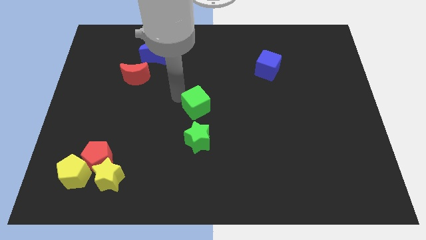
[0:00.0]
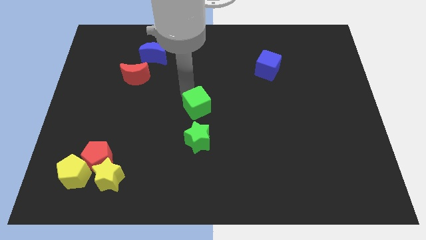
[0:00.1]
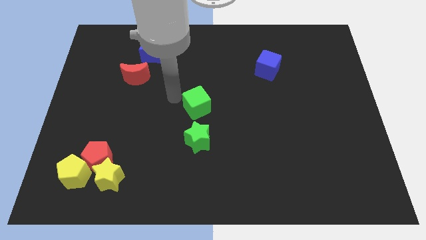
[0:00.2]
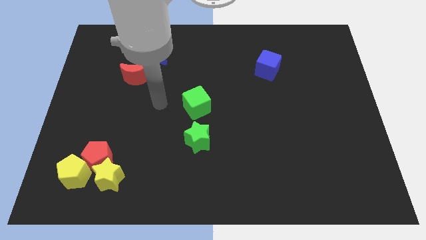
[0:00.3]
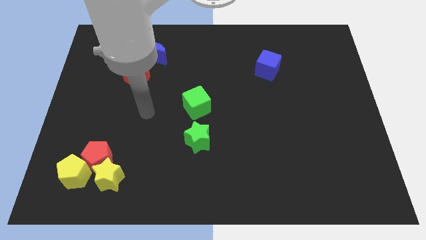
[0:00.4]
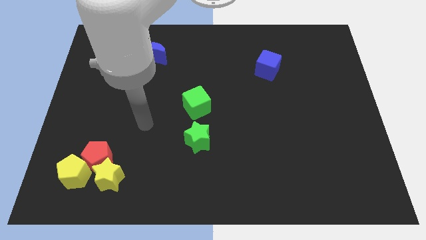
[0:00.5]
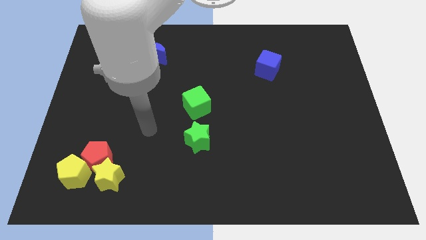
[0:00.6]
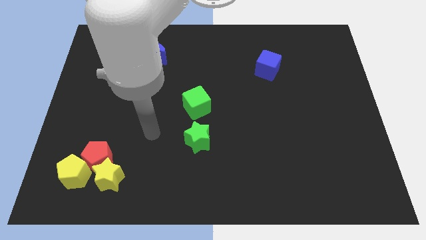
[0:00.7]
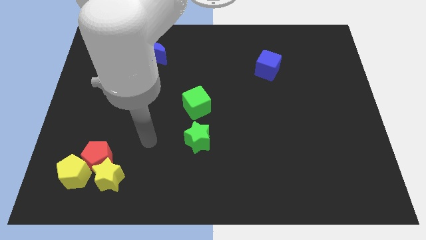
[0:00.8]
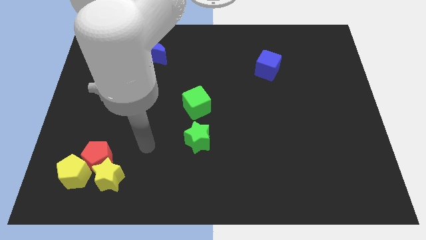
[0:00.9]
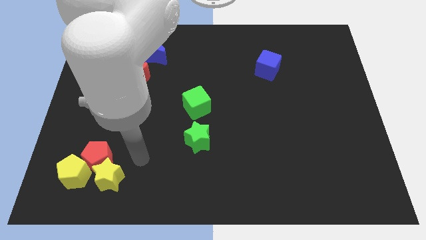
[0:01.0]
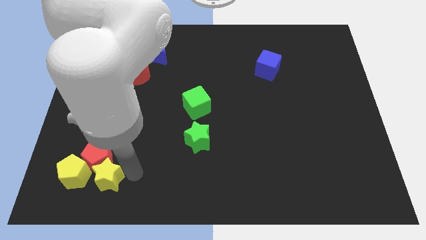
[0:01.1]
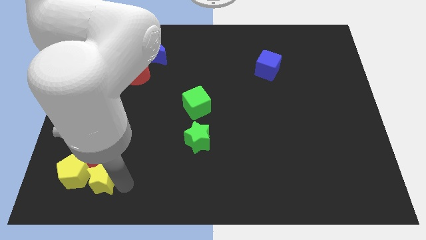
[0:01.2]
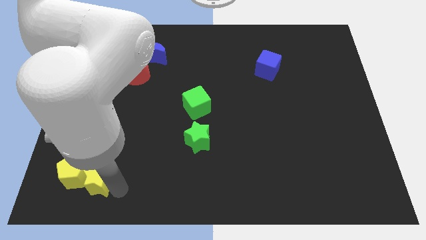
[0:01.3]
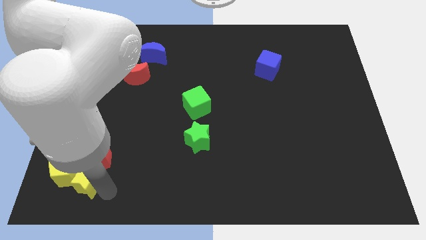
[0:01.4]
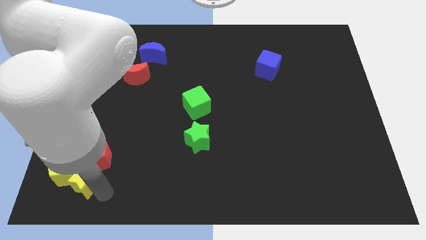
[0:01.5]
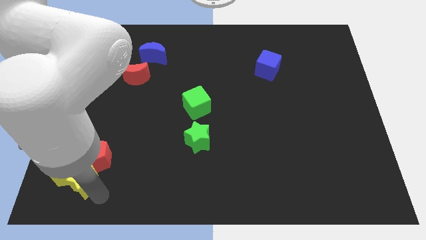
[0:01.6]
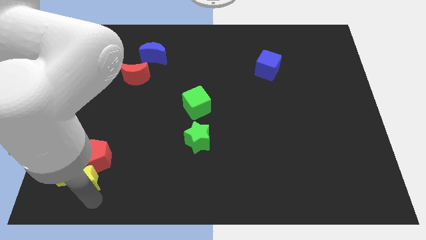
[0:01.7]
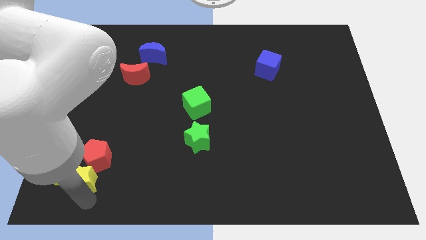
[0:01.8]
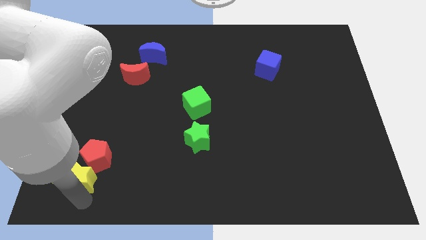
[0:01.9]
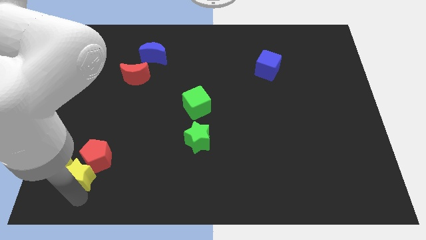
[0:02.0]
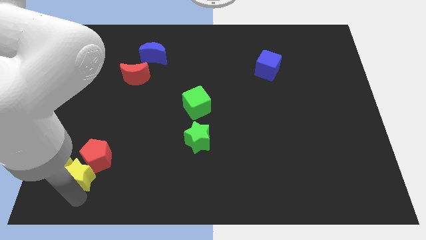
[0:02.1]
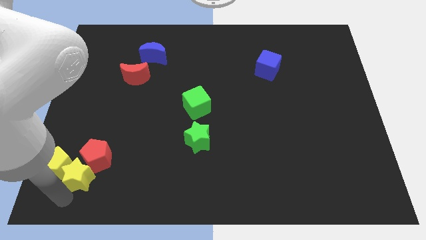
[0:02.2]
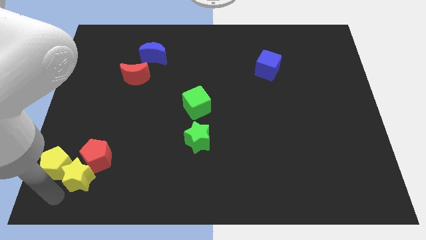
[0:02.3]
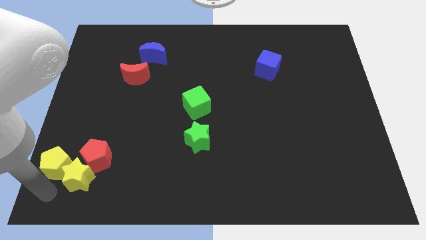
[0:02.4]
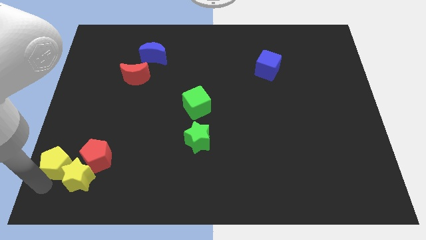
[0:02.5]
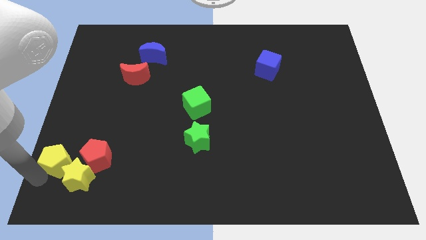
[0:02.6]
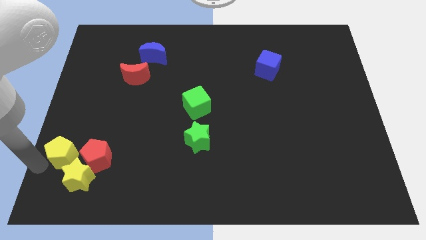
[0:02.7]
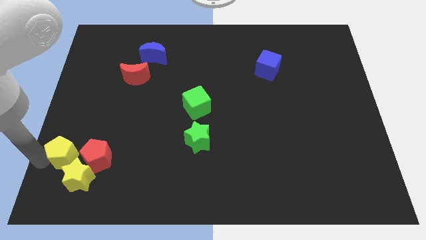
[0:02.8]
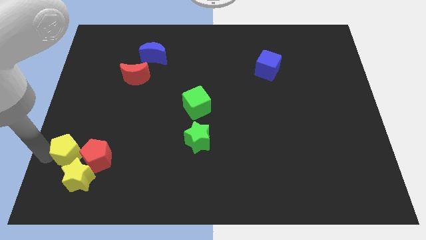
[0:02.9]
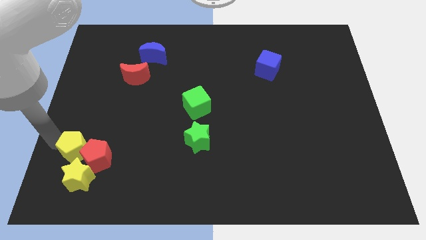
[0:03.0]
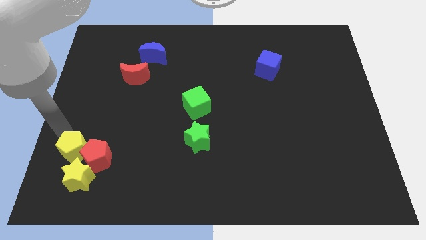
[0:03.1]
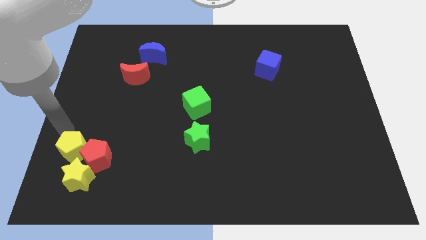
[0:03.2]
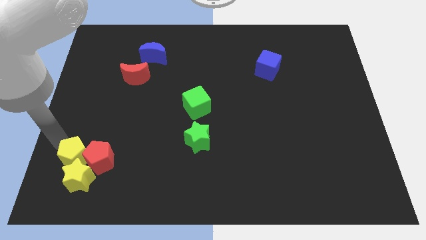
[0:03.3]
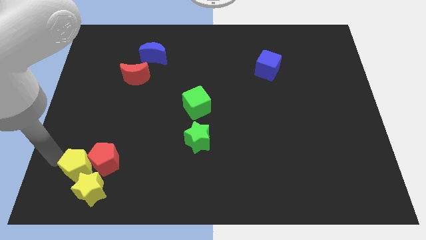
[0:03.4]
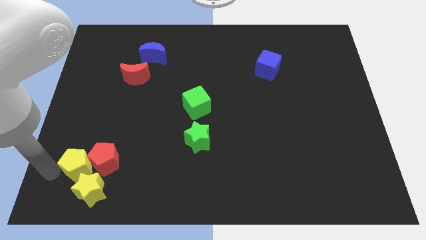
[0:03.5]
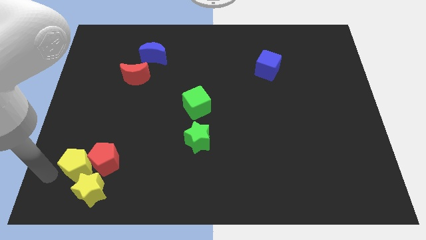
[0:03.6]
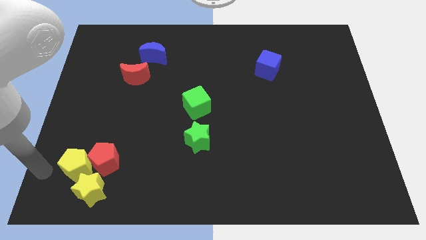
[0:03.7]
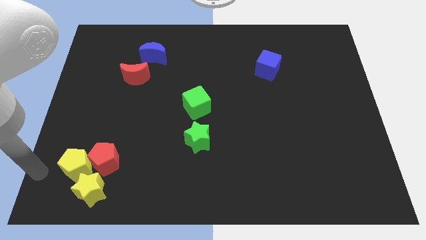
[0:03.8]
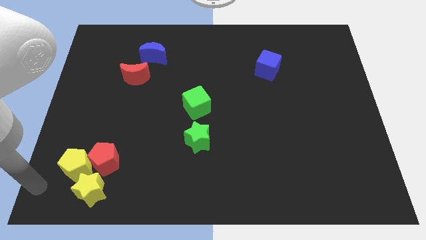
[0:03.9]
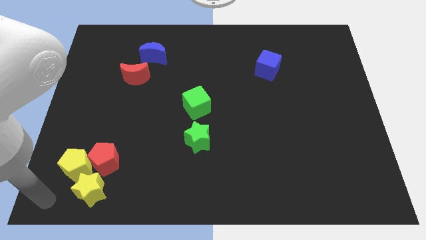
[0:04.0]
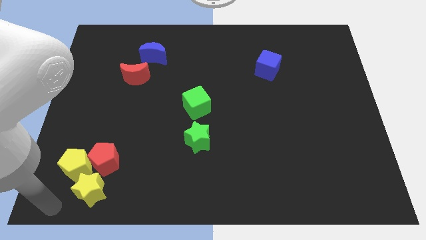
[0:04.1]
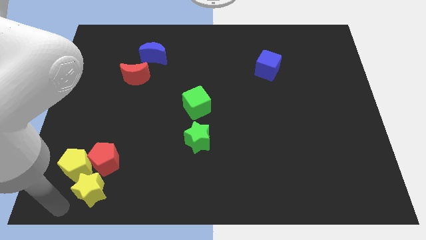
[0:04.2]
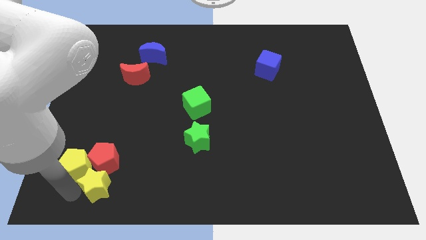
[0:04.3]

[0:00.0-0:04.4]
push the yellow pentagon into the yellow star

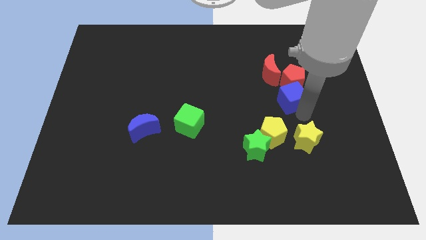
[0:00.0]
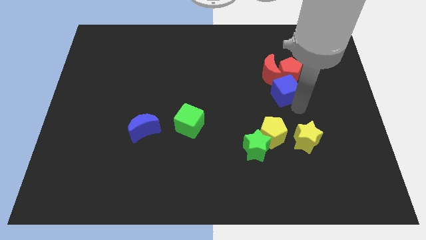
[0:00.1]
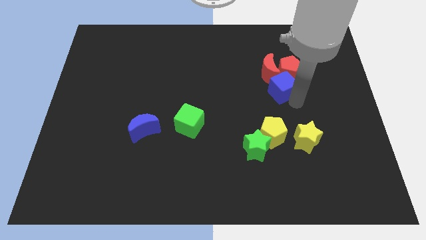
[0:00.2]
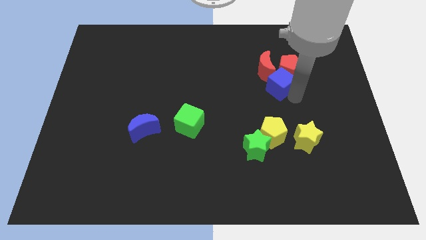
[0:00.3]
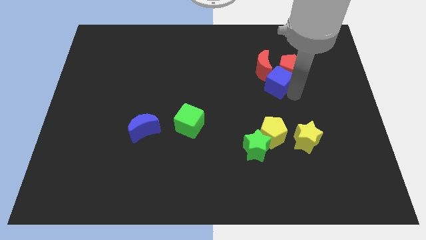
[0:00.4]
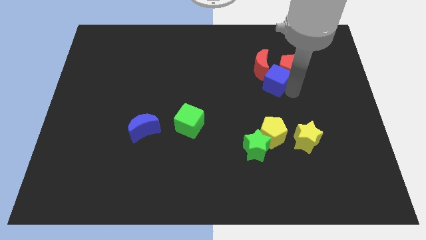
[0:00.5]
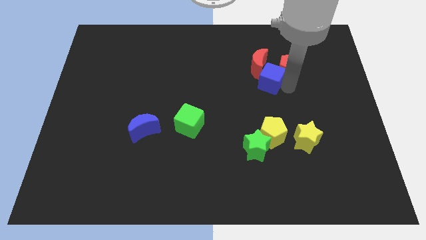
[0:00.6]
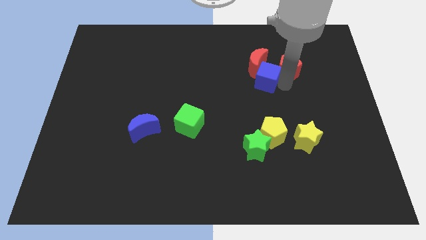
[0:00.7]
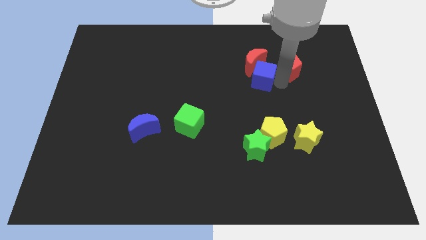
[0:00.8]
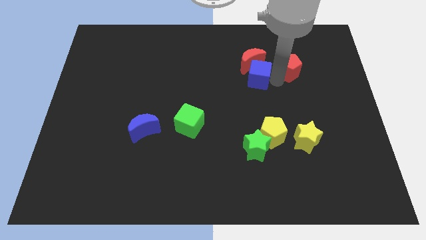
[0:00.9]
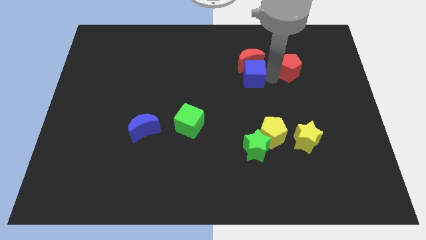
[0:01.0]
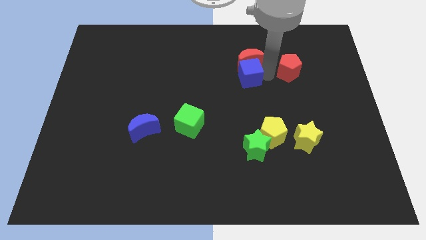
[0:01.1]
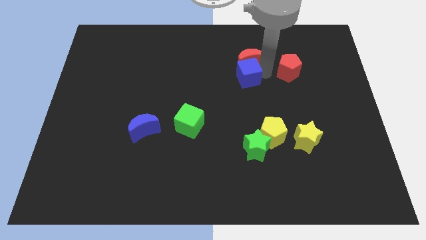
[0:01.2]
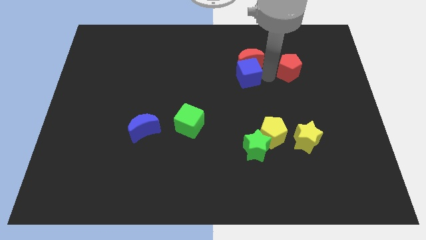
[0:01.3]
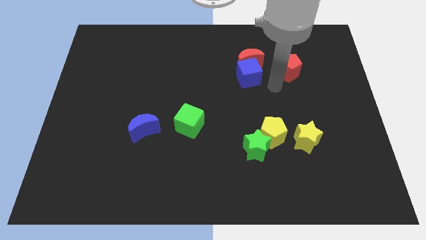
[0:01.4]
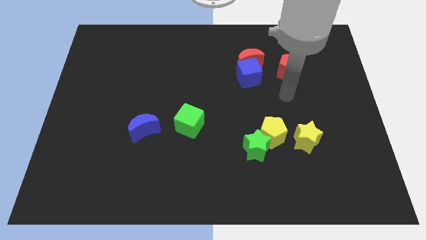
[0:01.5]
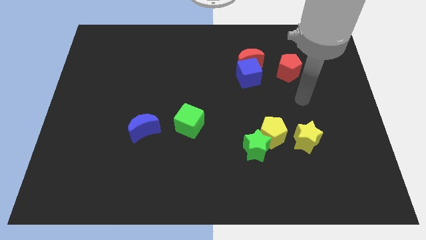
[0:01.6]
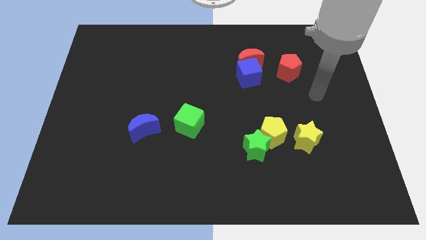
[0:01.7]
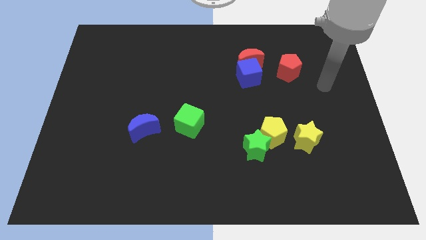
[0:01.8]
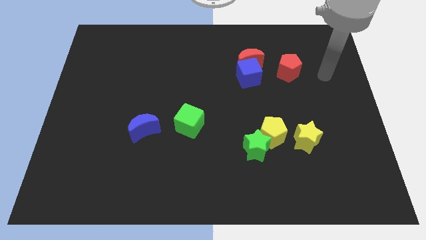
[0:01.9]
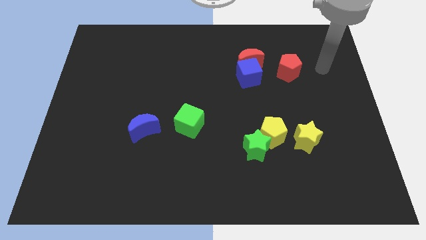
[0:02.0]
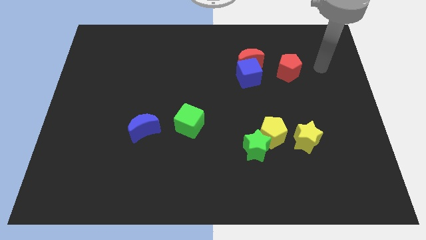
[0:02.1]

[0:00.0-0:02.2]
place the arm between the red pentagon and blue cube

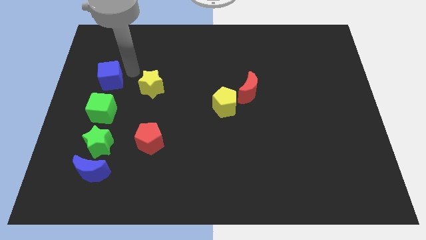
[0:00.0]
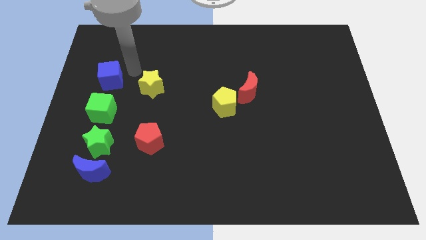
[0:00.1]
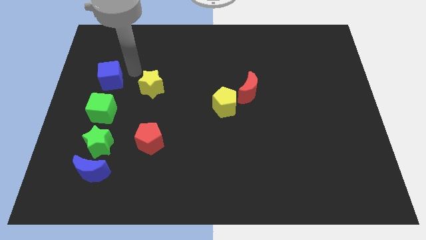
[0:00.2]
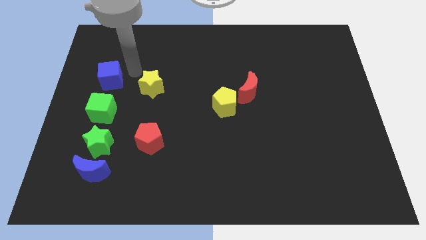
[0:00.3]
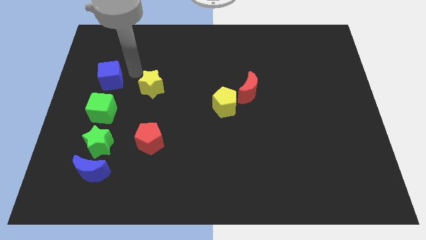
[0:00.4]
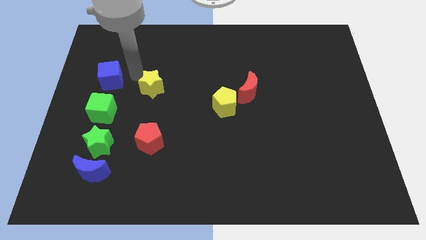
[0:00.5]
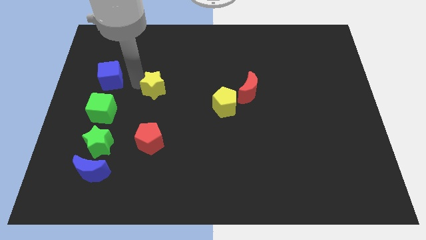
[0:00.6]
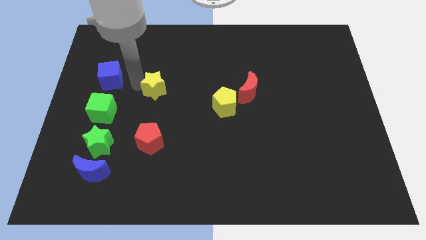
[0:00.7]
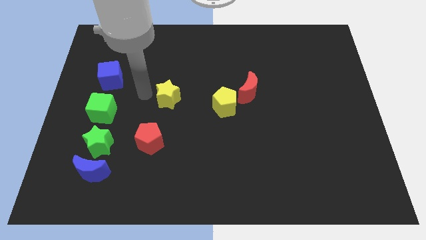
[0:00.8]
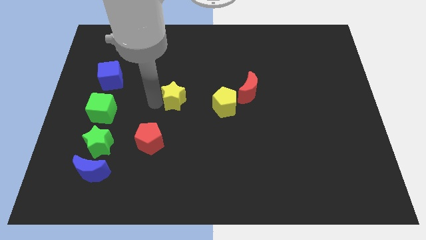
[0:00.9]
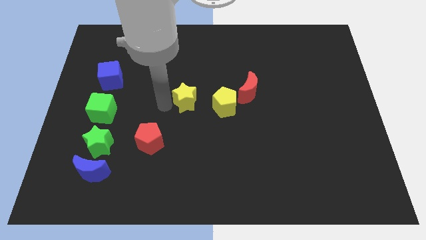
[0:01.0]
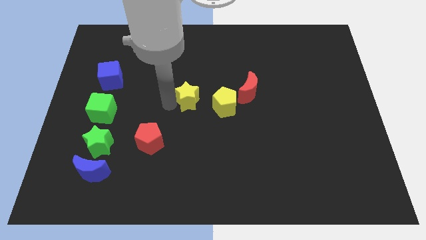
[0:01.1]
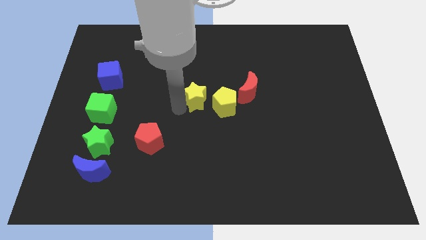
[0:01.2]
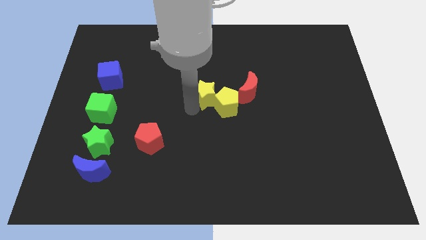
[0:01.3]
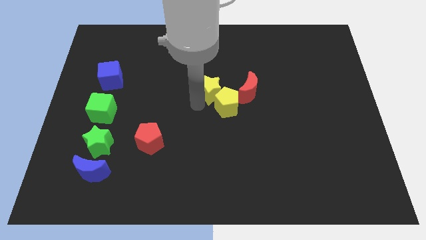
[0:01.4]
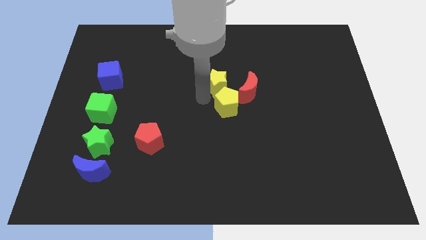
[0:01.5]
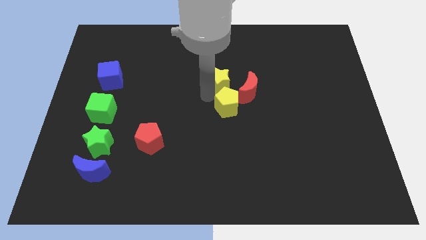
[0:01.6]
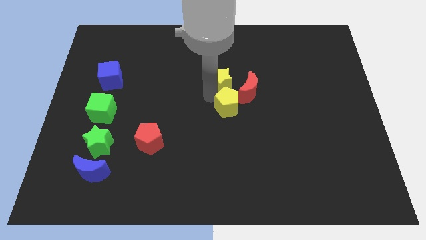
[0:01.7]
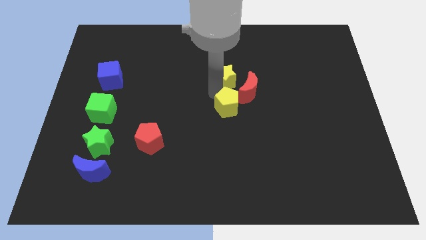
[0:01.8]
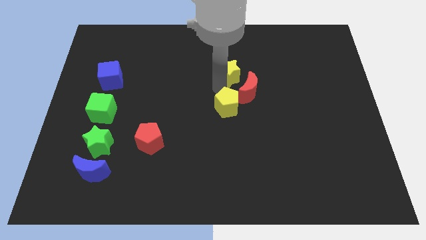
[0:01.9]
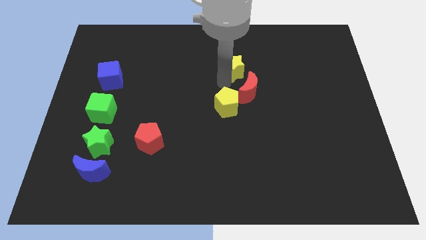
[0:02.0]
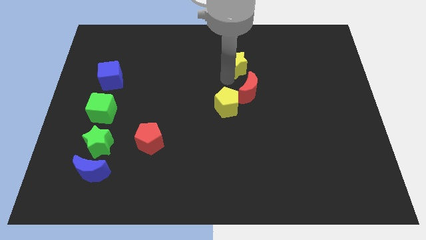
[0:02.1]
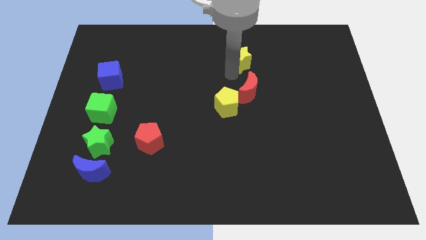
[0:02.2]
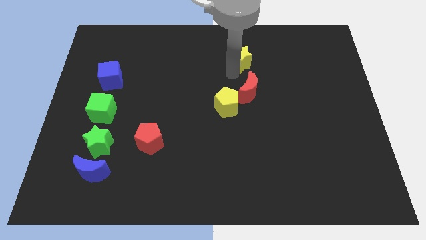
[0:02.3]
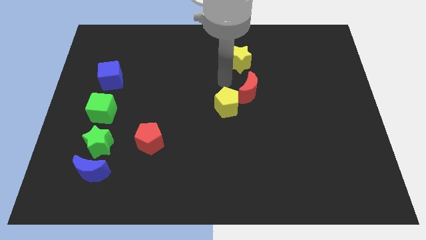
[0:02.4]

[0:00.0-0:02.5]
place yellow star above the red crescent

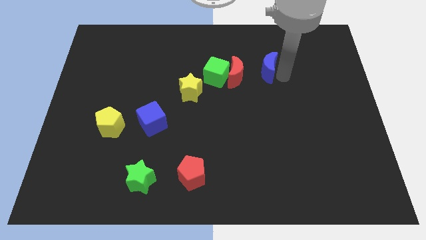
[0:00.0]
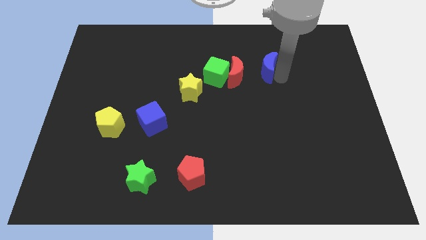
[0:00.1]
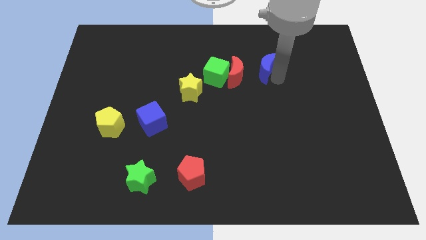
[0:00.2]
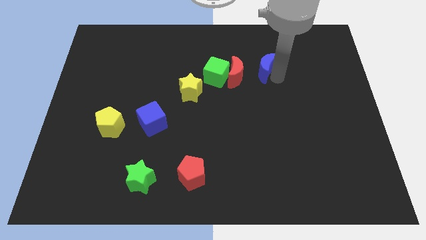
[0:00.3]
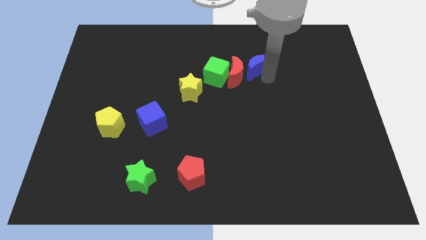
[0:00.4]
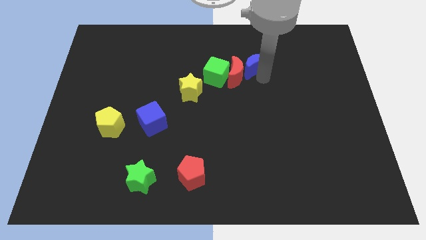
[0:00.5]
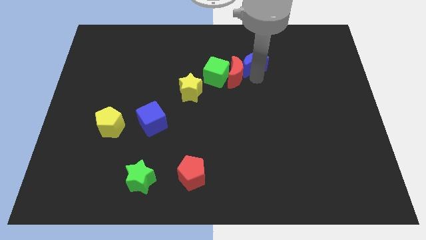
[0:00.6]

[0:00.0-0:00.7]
move the blue crescent close to the red crescent
